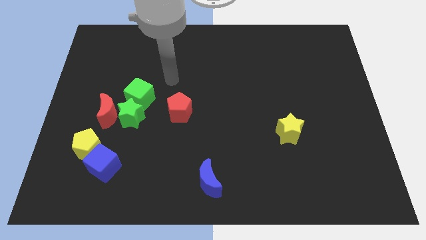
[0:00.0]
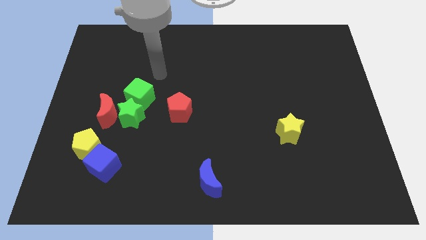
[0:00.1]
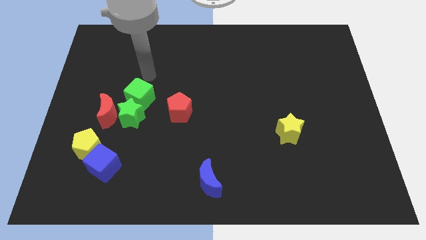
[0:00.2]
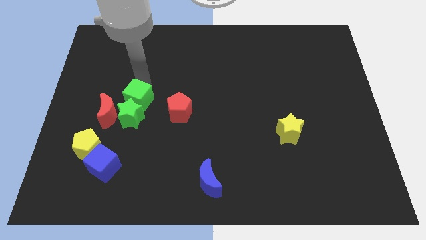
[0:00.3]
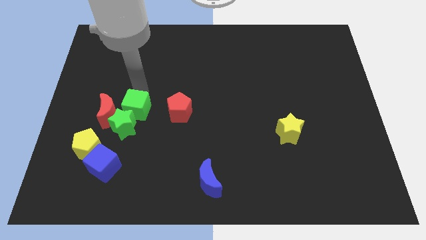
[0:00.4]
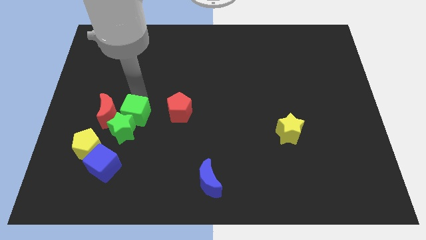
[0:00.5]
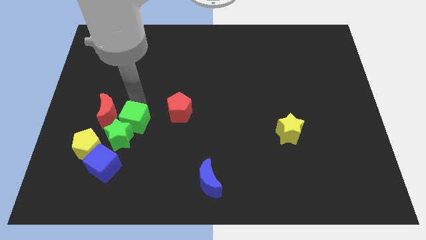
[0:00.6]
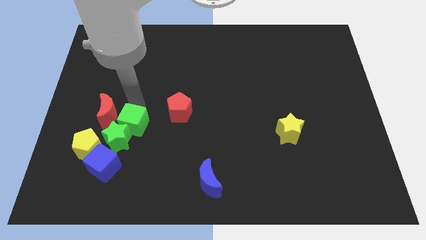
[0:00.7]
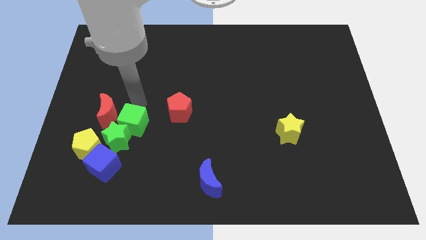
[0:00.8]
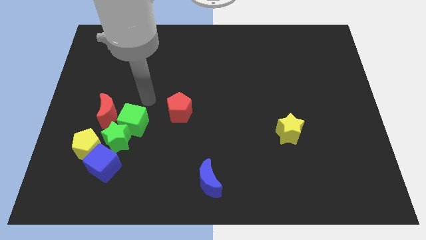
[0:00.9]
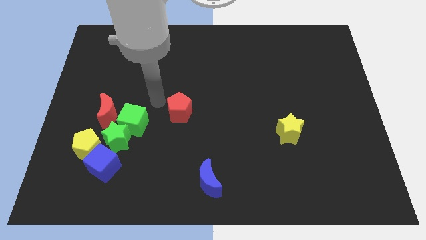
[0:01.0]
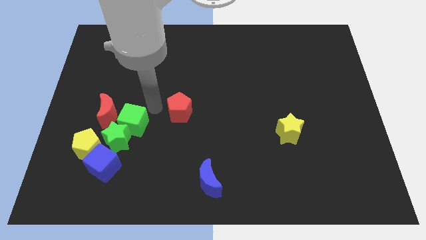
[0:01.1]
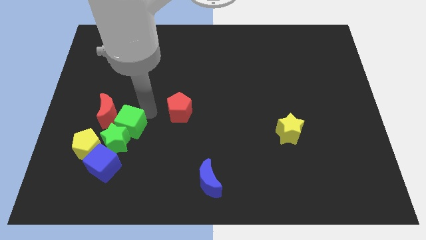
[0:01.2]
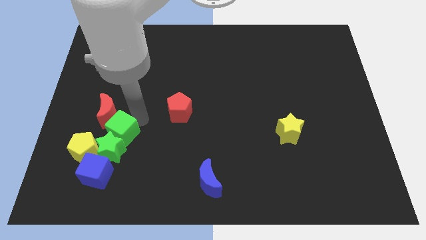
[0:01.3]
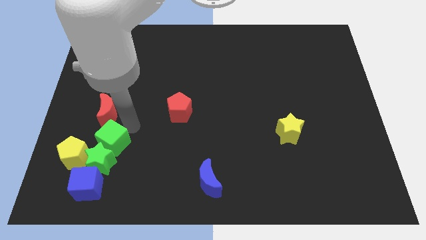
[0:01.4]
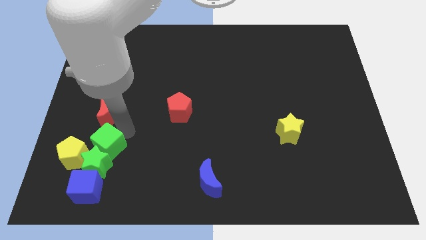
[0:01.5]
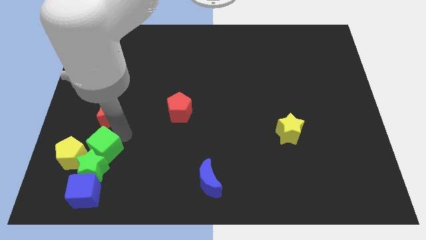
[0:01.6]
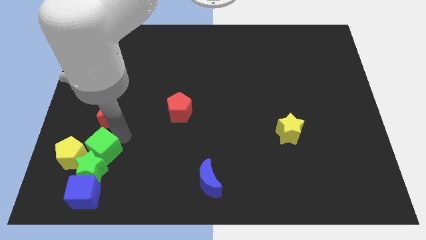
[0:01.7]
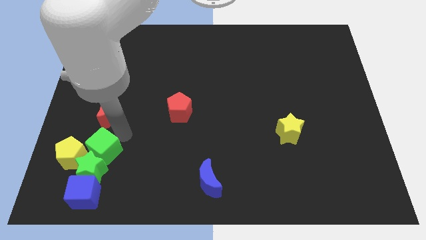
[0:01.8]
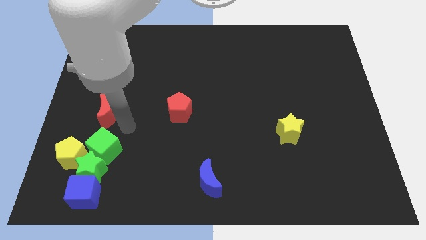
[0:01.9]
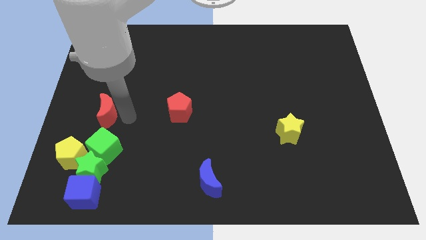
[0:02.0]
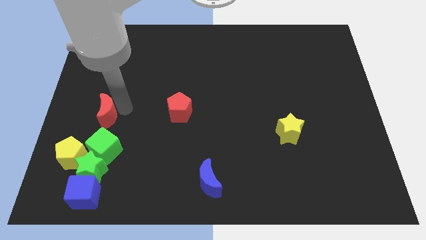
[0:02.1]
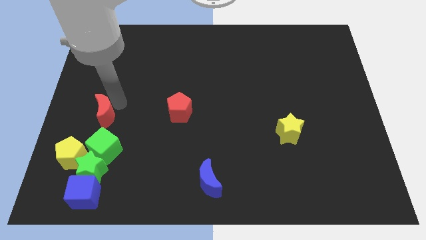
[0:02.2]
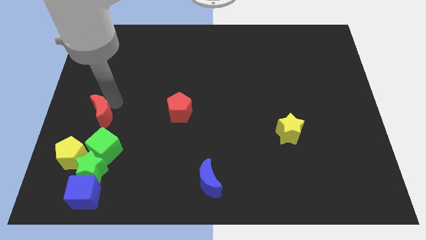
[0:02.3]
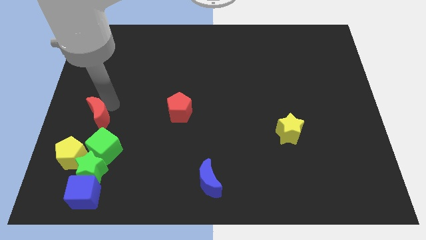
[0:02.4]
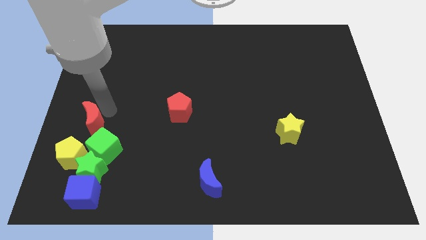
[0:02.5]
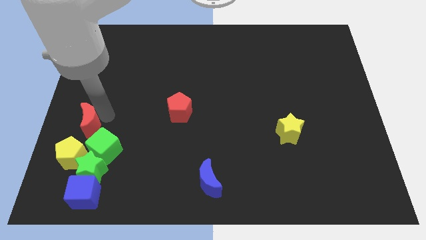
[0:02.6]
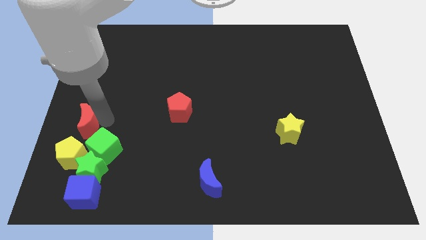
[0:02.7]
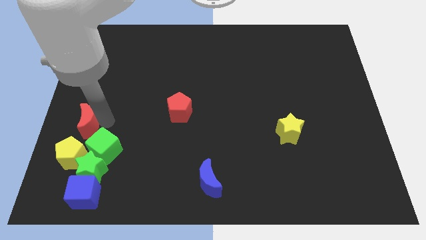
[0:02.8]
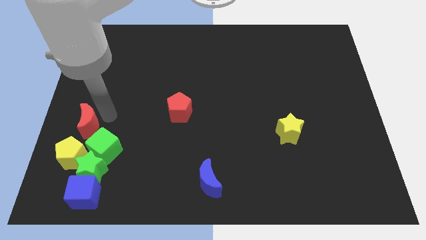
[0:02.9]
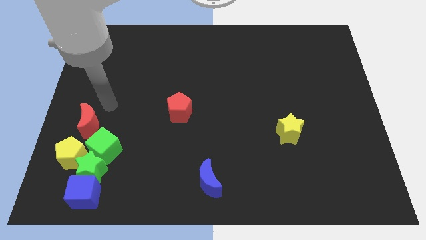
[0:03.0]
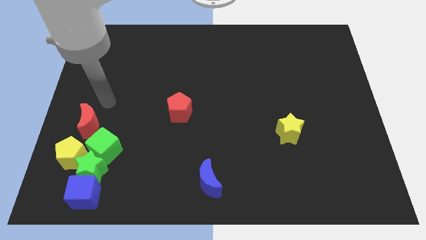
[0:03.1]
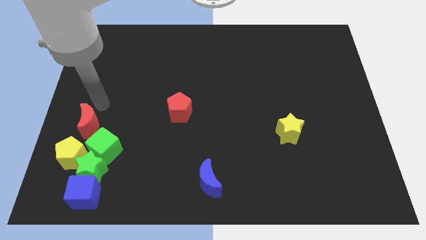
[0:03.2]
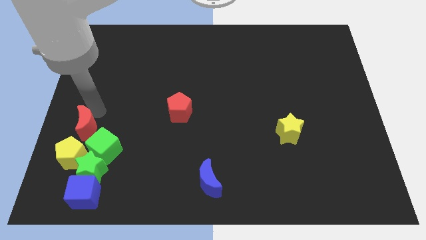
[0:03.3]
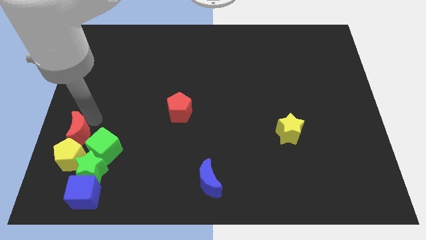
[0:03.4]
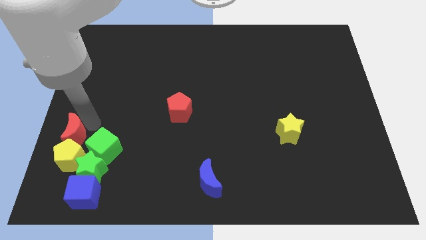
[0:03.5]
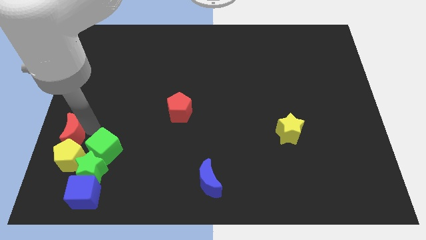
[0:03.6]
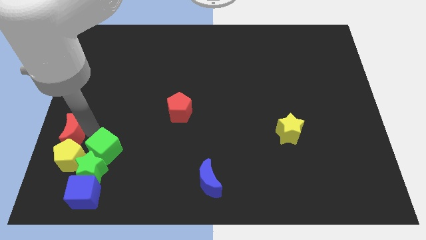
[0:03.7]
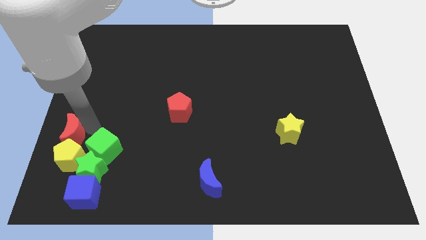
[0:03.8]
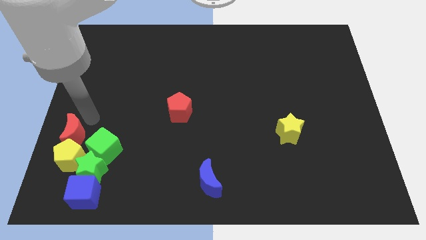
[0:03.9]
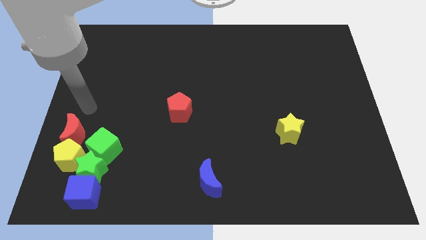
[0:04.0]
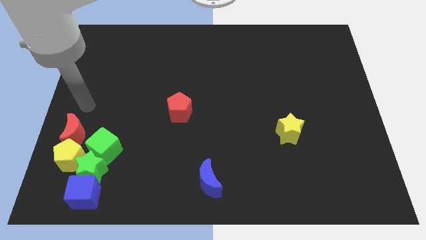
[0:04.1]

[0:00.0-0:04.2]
adjust green blocks and red crescent towards the yellow pentagon

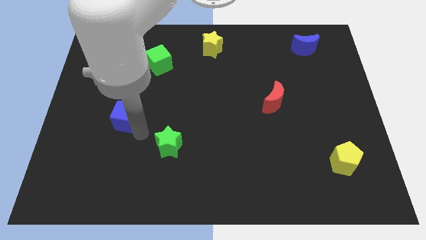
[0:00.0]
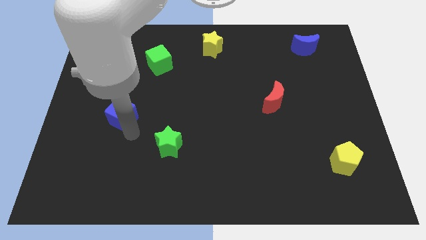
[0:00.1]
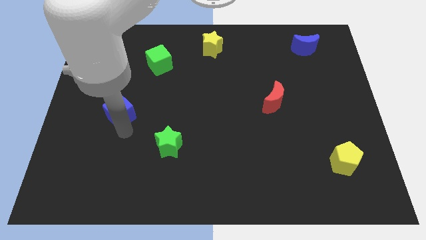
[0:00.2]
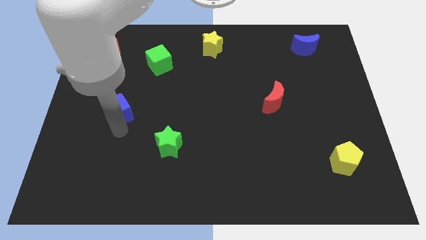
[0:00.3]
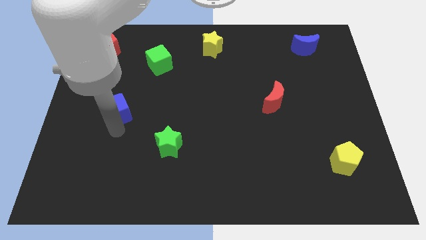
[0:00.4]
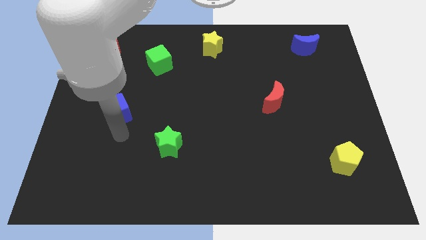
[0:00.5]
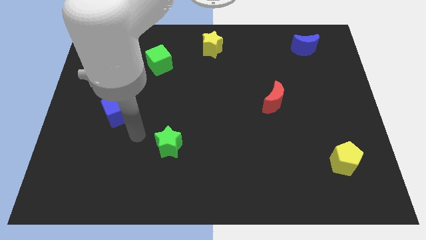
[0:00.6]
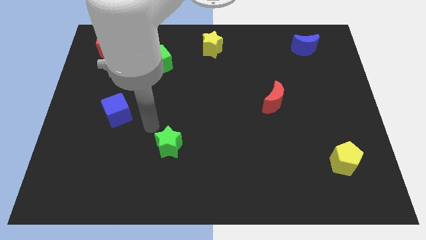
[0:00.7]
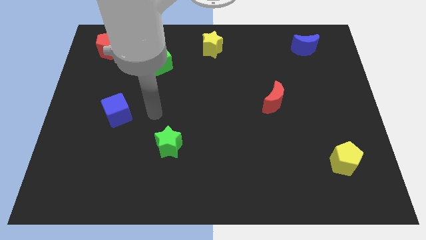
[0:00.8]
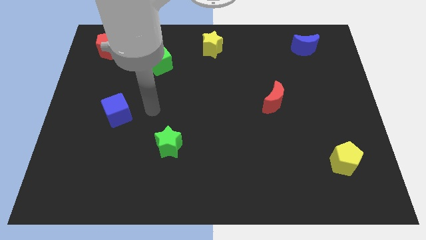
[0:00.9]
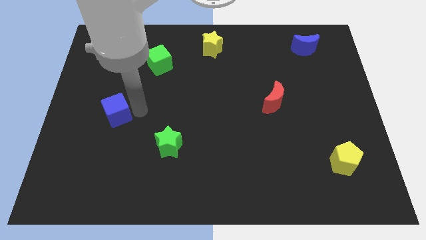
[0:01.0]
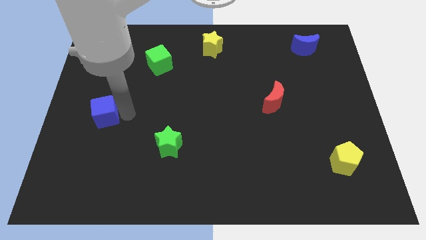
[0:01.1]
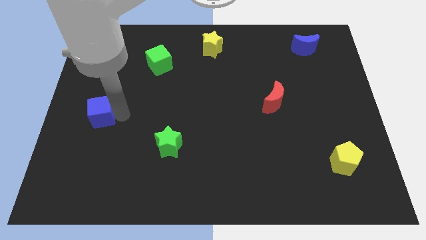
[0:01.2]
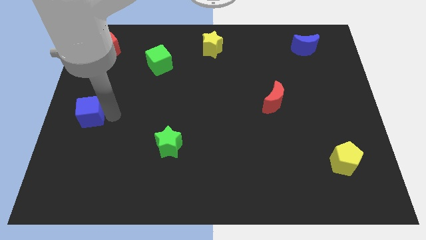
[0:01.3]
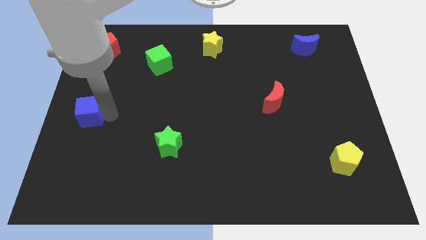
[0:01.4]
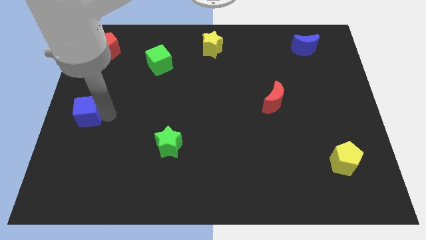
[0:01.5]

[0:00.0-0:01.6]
push the blue cube slightly to the left

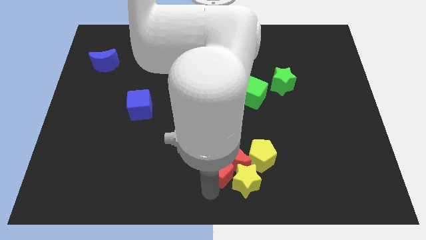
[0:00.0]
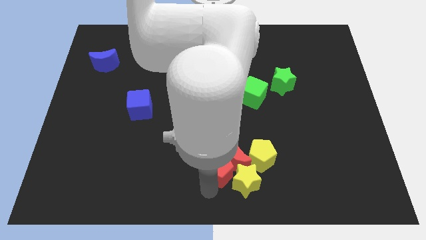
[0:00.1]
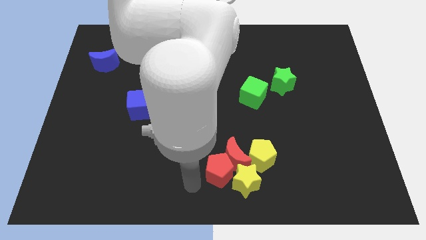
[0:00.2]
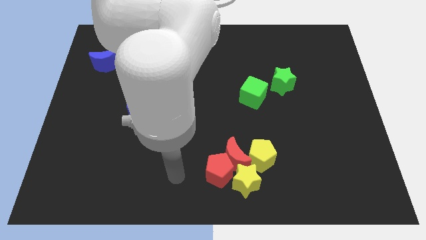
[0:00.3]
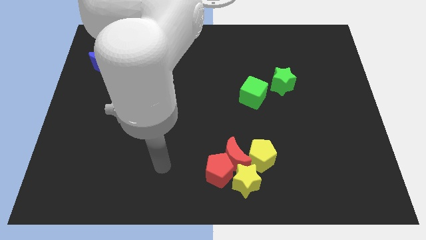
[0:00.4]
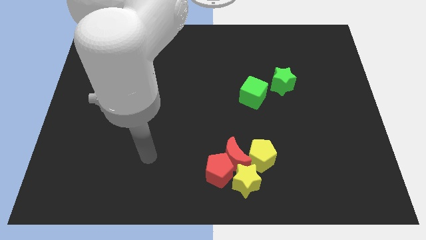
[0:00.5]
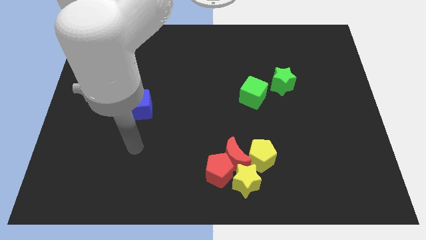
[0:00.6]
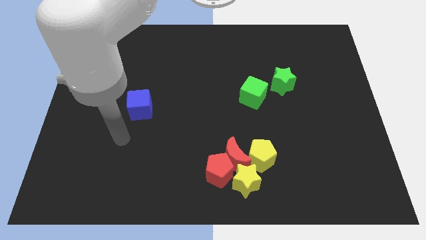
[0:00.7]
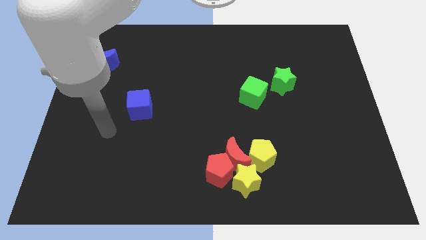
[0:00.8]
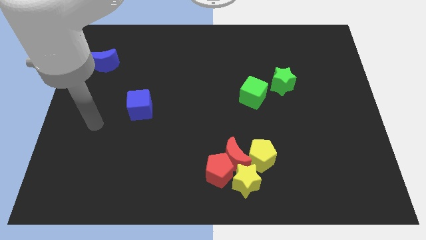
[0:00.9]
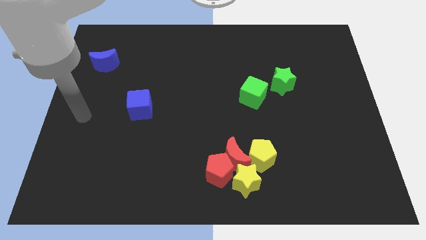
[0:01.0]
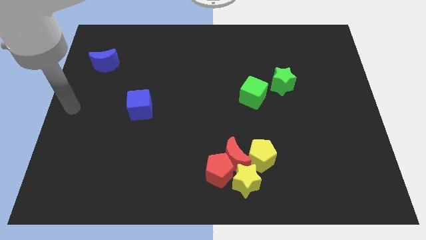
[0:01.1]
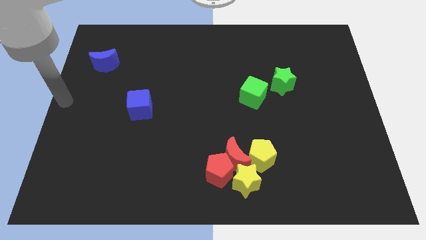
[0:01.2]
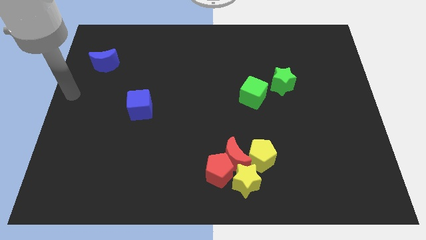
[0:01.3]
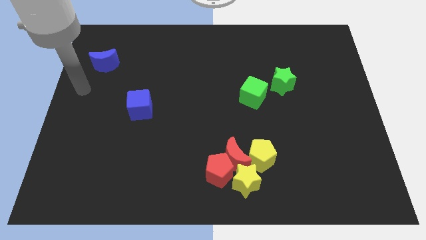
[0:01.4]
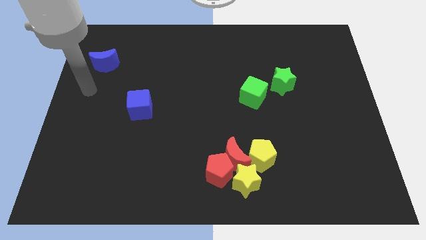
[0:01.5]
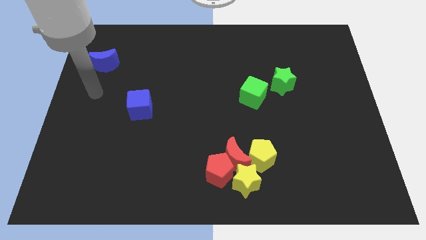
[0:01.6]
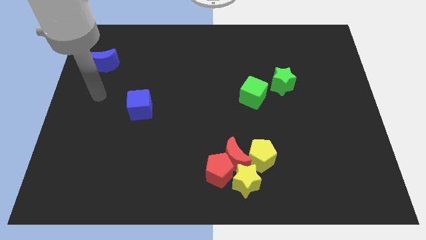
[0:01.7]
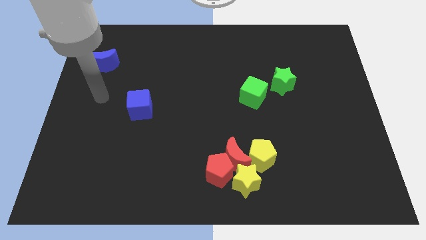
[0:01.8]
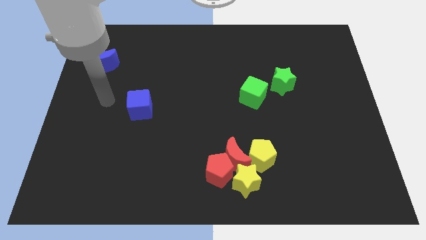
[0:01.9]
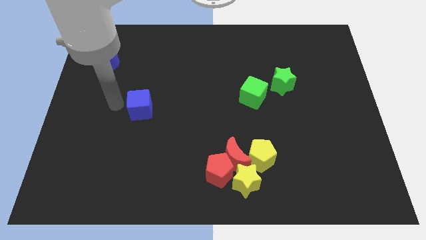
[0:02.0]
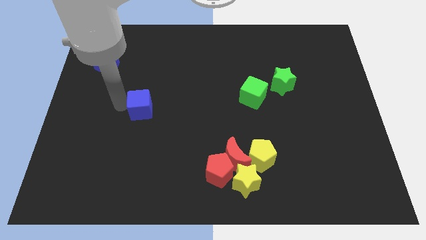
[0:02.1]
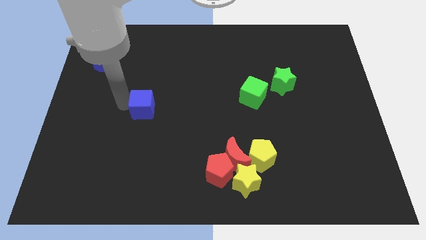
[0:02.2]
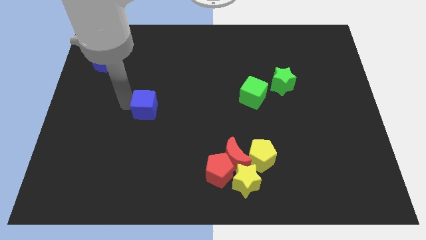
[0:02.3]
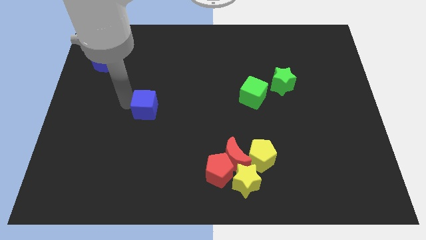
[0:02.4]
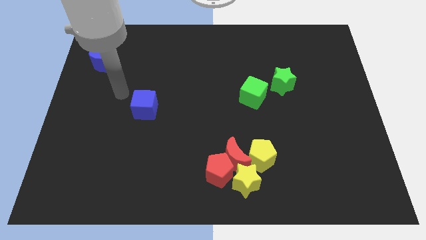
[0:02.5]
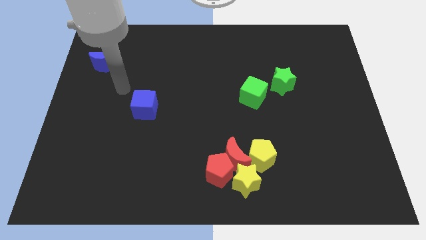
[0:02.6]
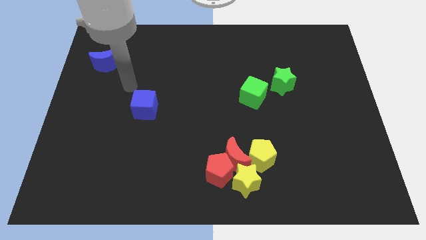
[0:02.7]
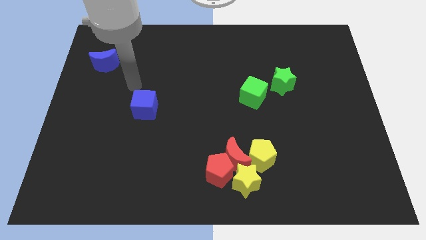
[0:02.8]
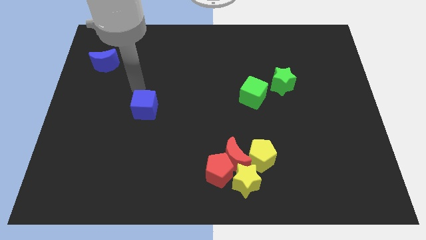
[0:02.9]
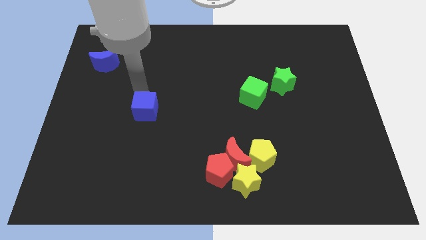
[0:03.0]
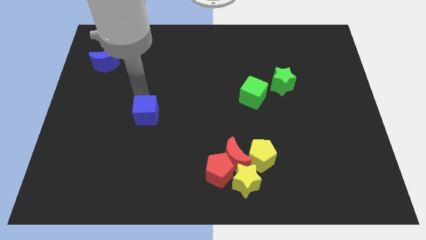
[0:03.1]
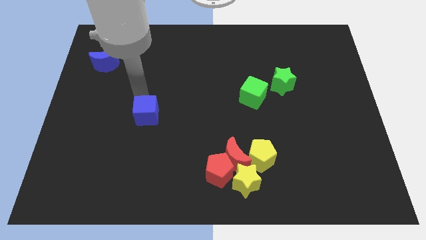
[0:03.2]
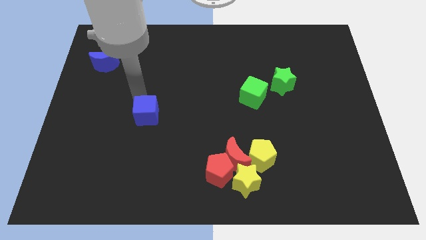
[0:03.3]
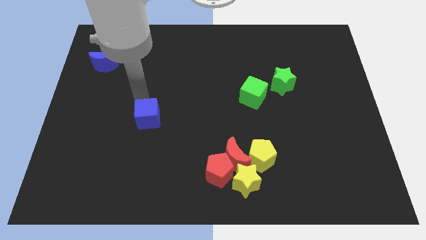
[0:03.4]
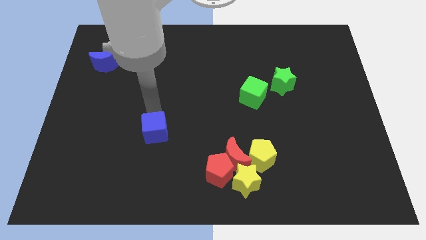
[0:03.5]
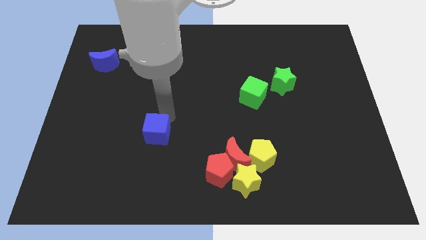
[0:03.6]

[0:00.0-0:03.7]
move the blue cube slightly down
